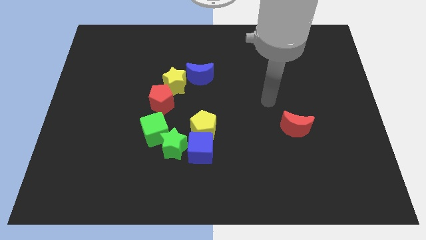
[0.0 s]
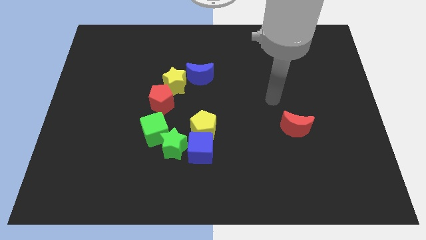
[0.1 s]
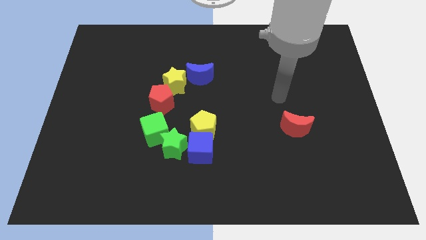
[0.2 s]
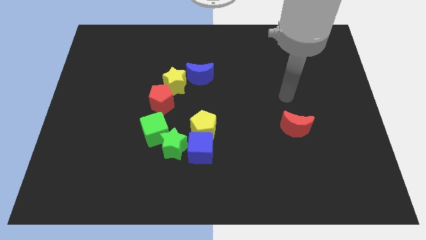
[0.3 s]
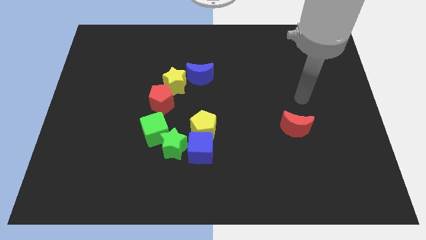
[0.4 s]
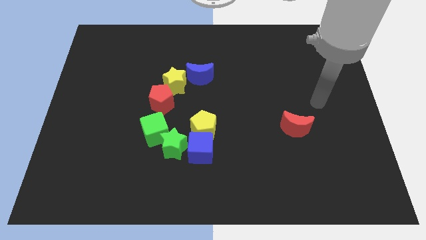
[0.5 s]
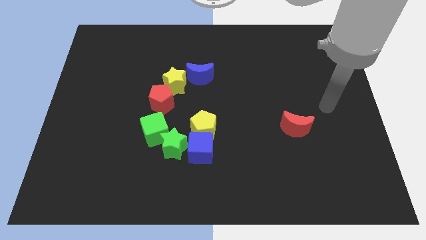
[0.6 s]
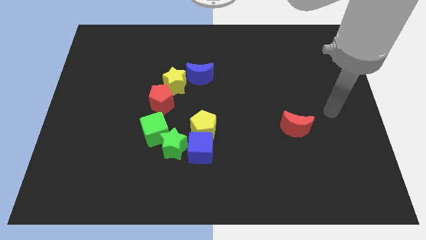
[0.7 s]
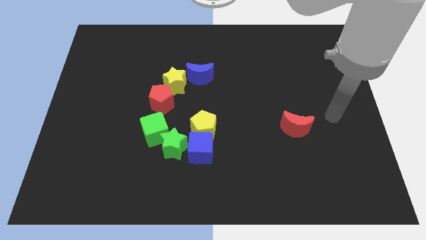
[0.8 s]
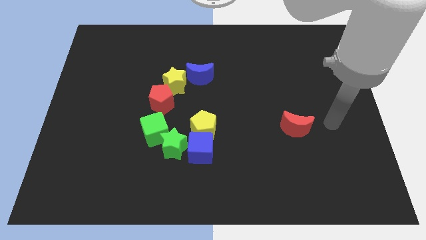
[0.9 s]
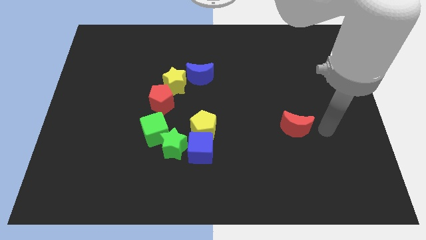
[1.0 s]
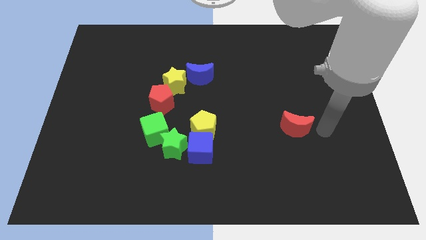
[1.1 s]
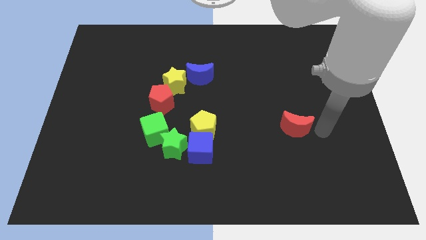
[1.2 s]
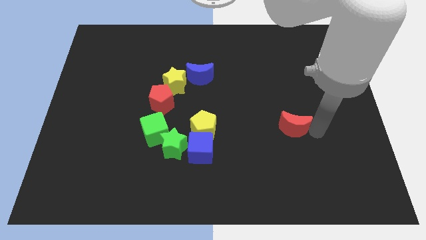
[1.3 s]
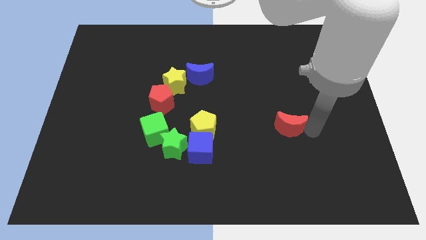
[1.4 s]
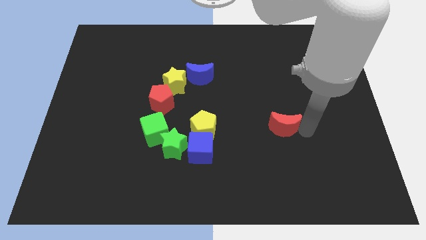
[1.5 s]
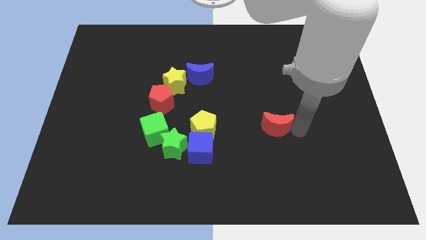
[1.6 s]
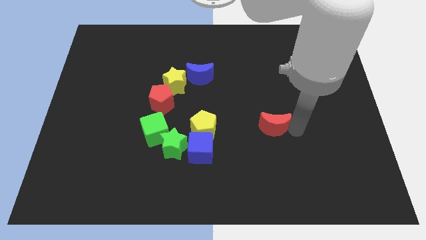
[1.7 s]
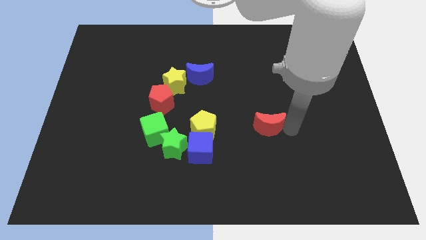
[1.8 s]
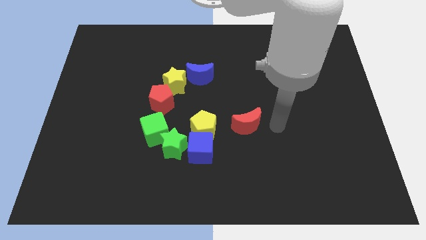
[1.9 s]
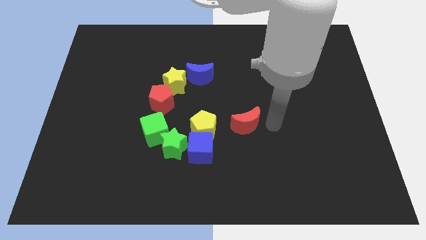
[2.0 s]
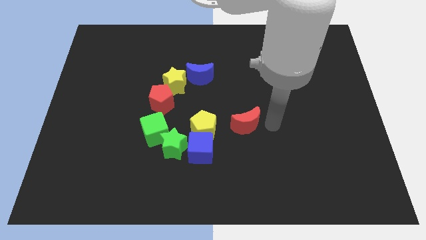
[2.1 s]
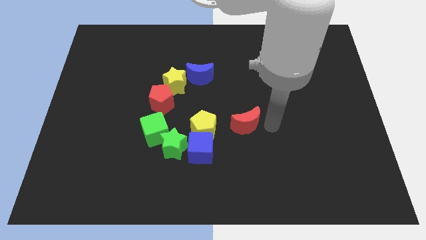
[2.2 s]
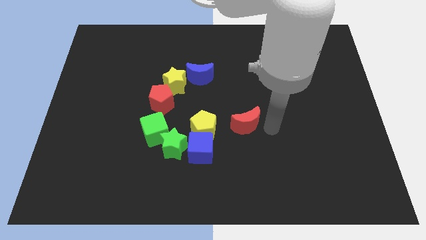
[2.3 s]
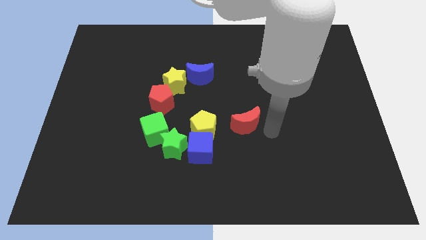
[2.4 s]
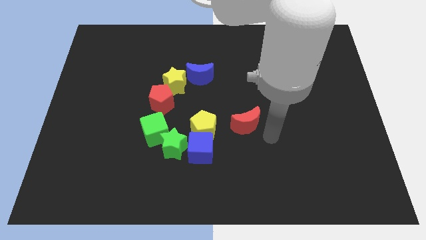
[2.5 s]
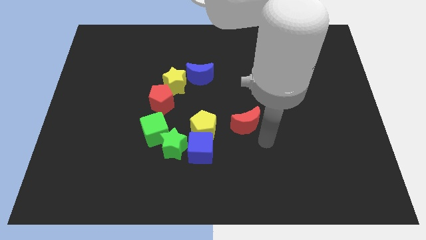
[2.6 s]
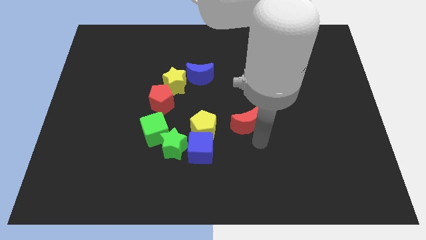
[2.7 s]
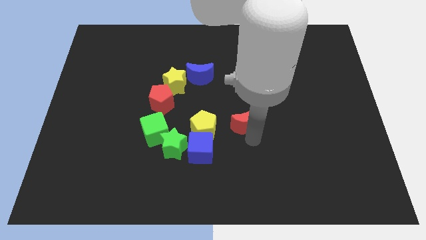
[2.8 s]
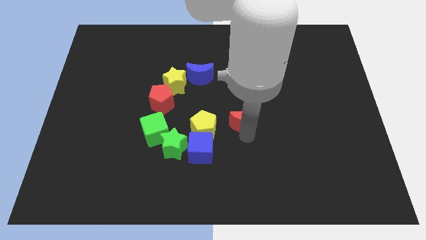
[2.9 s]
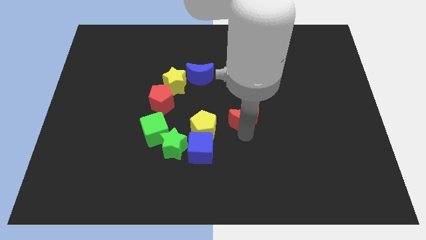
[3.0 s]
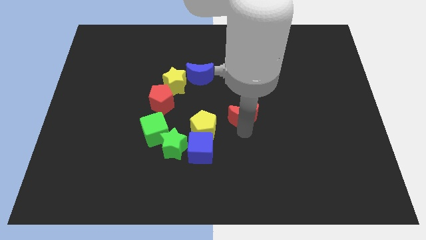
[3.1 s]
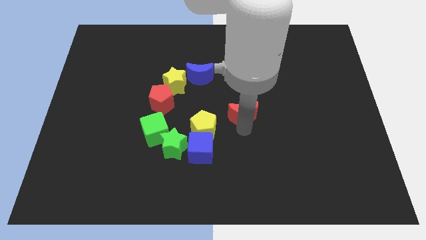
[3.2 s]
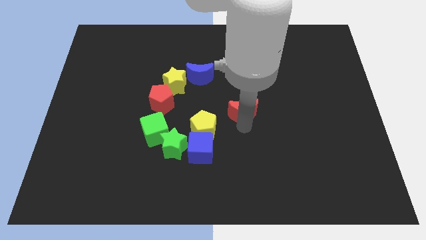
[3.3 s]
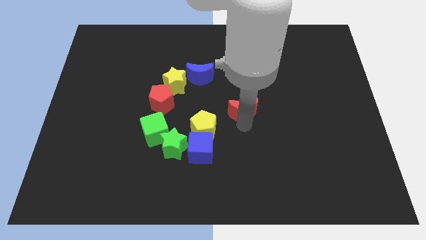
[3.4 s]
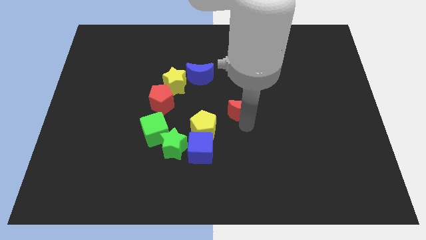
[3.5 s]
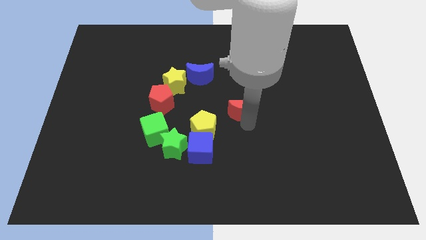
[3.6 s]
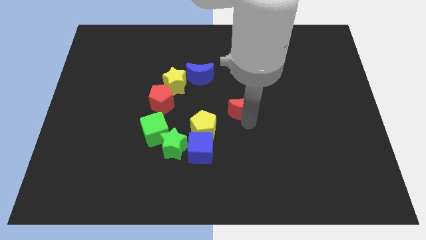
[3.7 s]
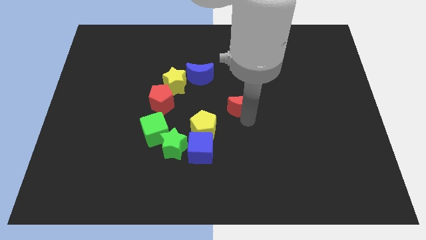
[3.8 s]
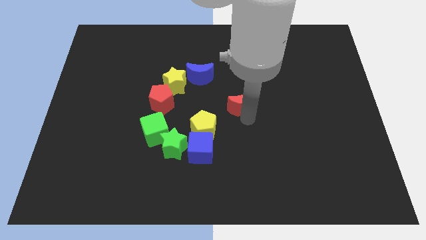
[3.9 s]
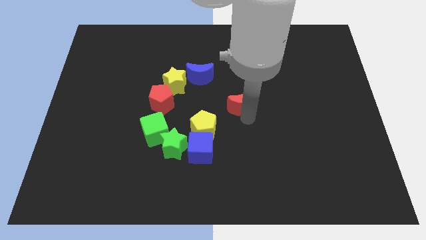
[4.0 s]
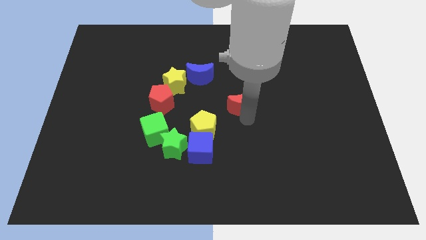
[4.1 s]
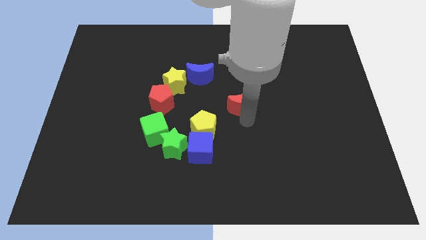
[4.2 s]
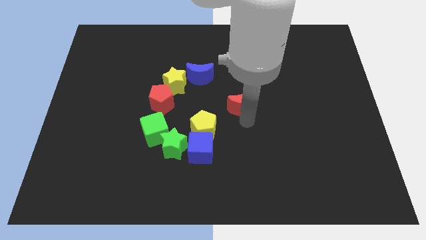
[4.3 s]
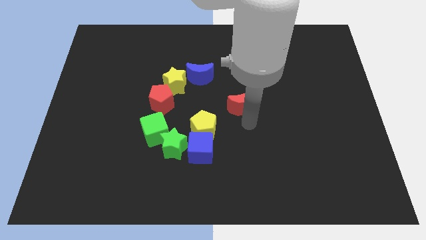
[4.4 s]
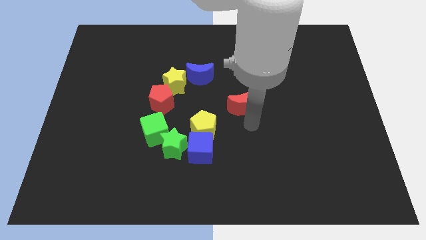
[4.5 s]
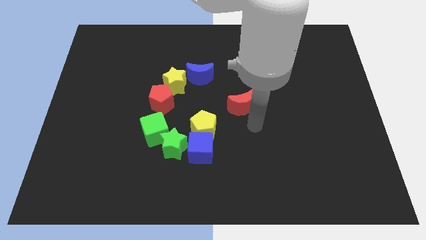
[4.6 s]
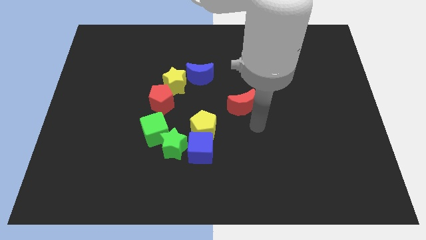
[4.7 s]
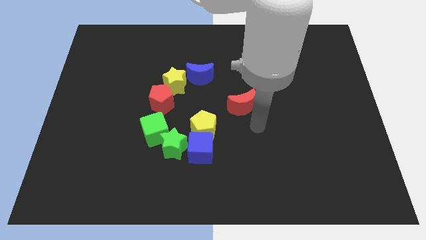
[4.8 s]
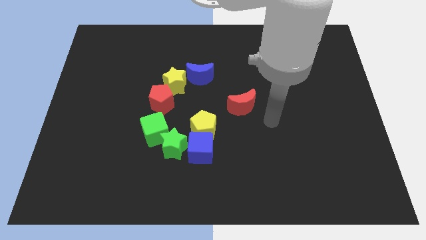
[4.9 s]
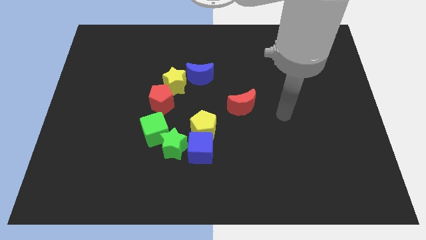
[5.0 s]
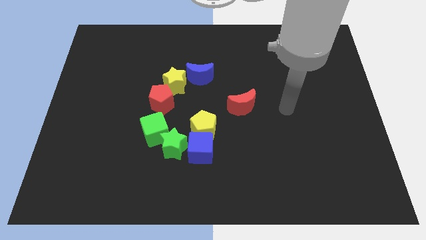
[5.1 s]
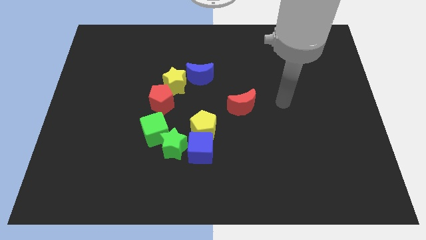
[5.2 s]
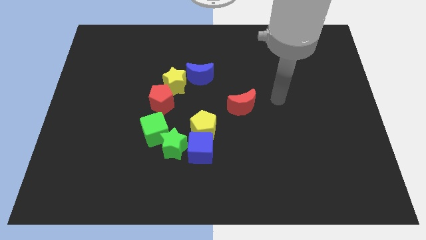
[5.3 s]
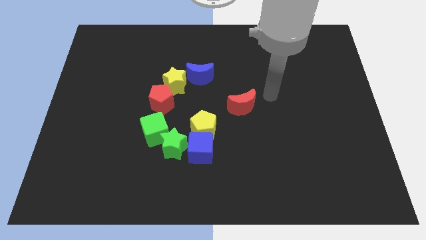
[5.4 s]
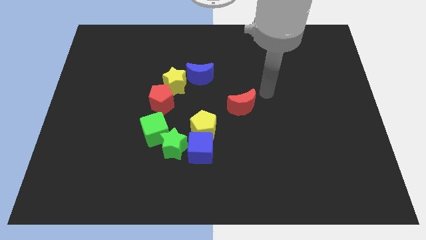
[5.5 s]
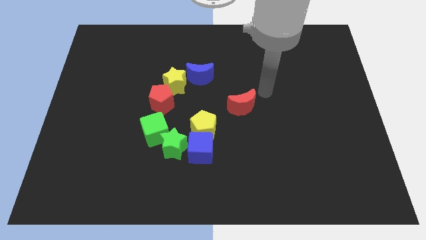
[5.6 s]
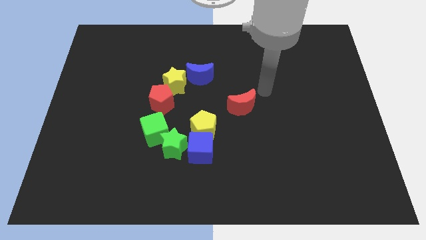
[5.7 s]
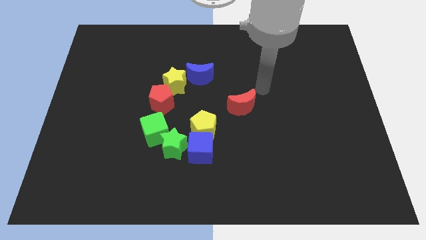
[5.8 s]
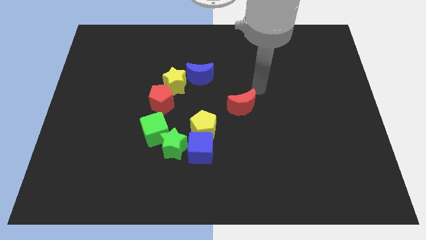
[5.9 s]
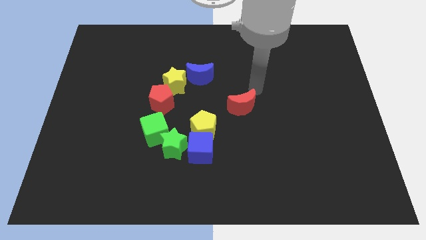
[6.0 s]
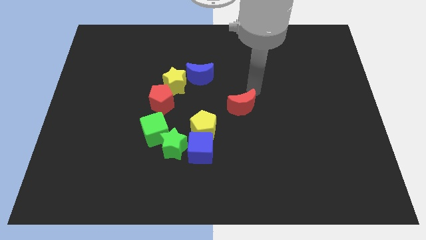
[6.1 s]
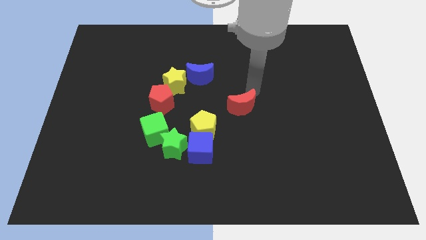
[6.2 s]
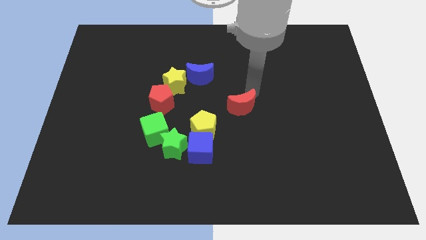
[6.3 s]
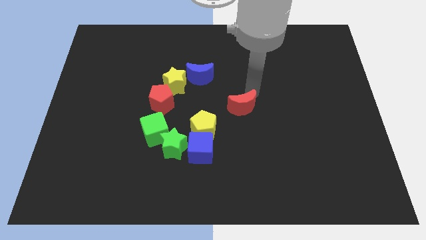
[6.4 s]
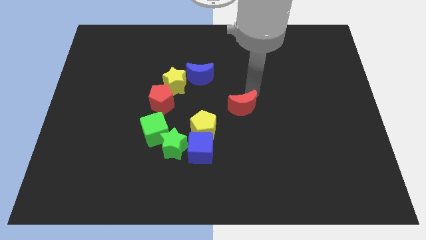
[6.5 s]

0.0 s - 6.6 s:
push the red crescent to the center of the board

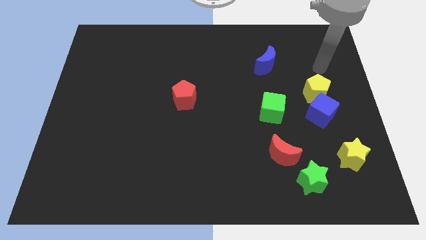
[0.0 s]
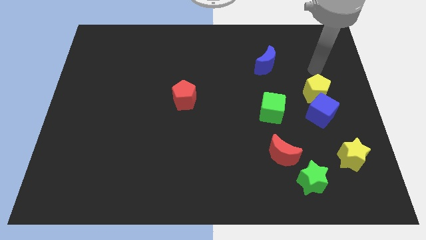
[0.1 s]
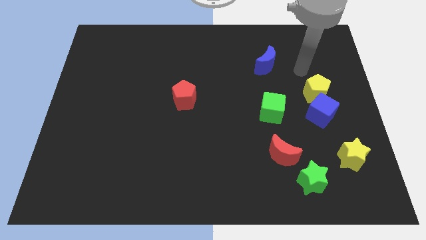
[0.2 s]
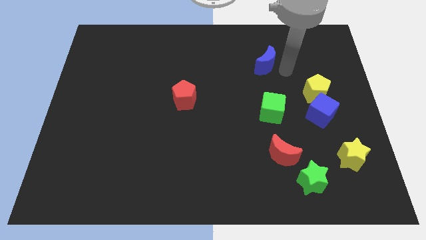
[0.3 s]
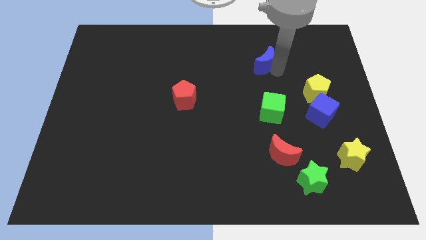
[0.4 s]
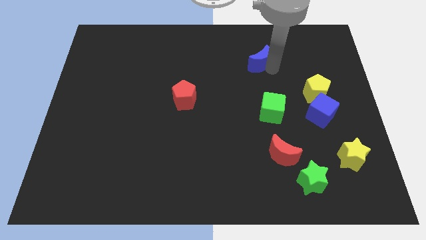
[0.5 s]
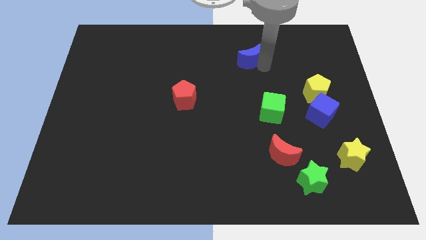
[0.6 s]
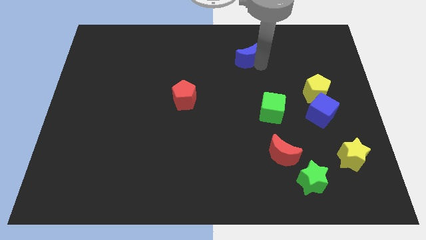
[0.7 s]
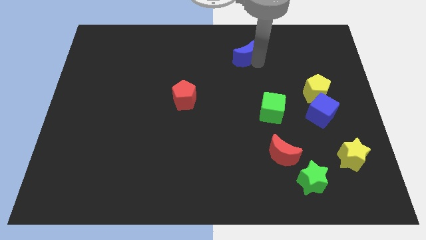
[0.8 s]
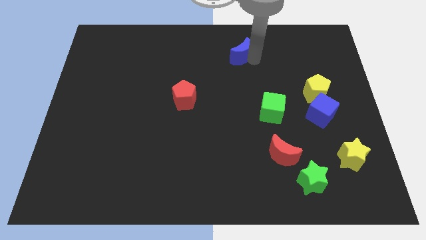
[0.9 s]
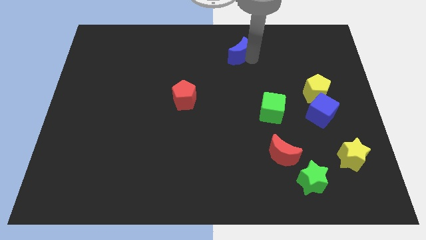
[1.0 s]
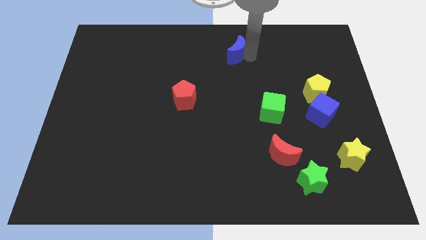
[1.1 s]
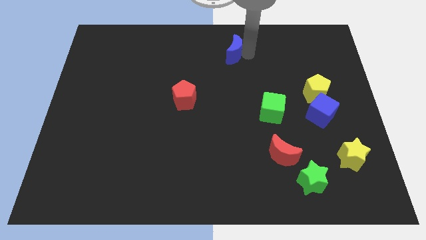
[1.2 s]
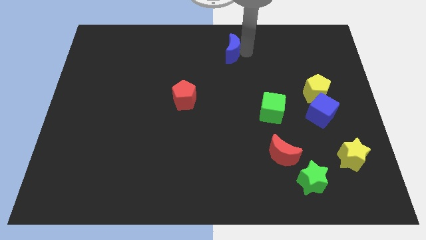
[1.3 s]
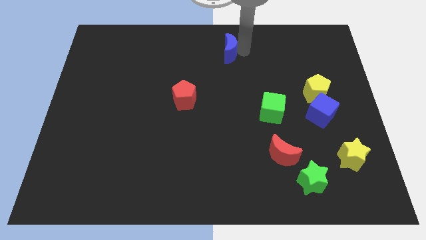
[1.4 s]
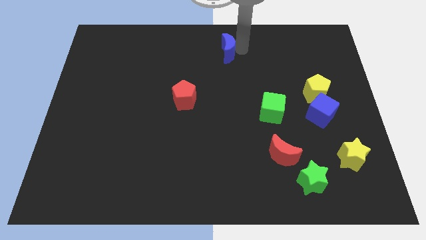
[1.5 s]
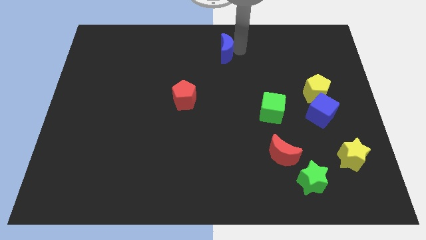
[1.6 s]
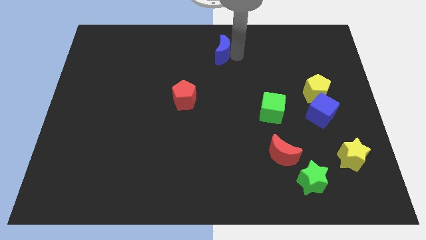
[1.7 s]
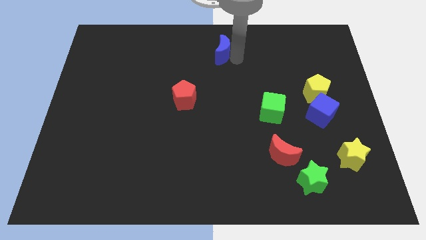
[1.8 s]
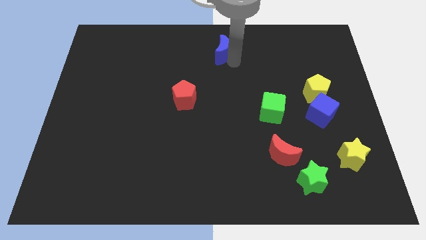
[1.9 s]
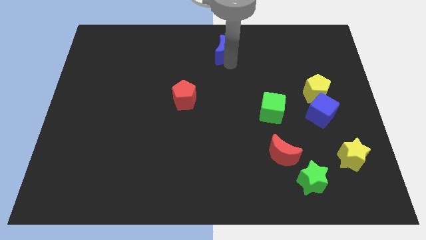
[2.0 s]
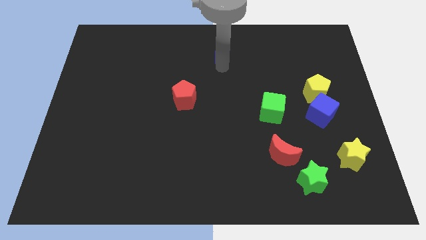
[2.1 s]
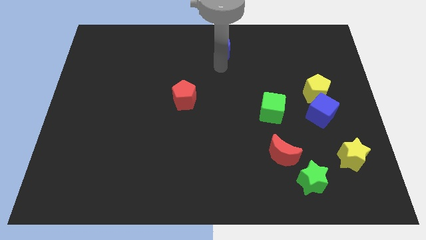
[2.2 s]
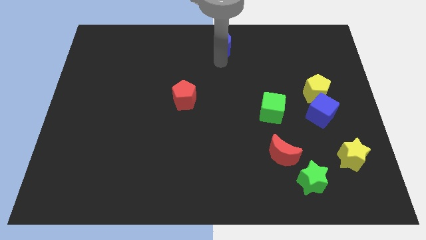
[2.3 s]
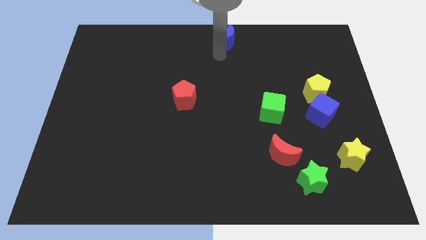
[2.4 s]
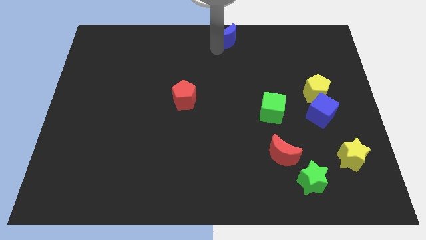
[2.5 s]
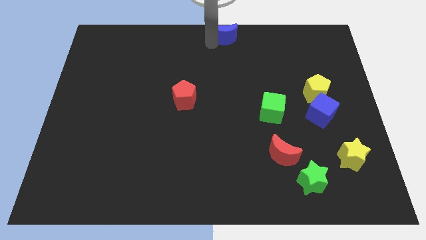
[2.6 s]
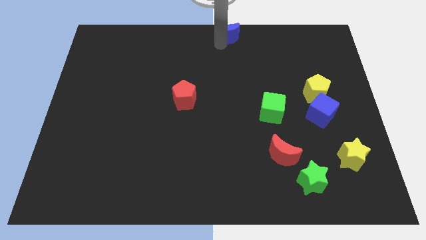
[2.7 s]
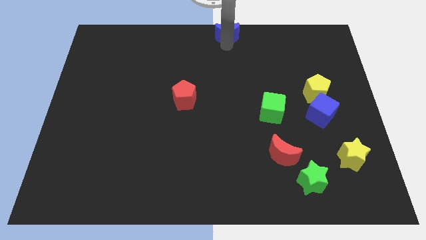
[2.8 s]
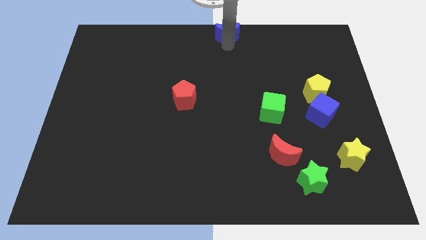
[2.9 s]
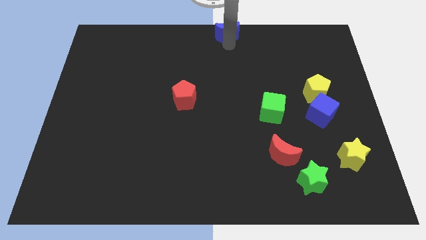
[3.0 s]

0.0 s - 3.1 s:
push blue moon towards the top center
